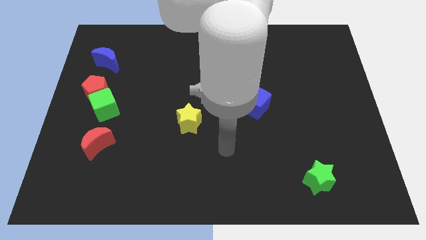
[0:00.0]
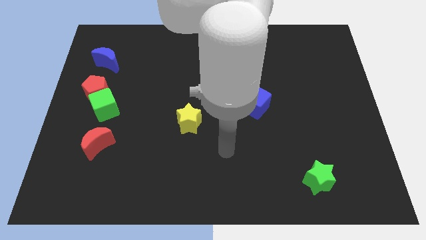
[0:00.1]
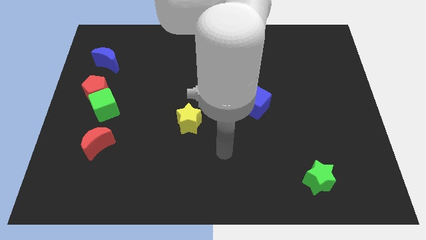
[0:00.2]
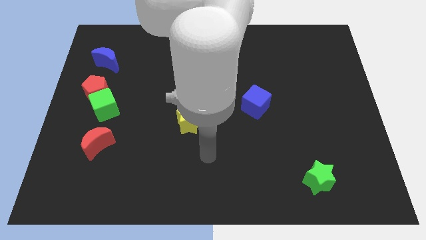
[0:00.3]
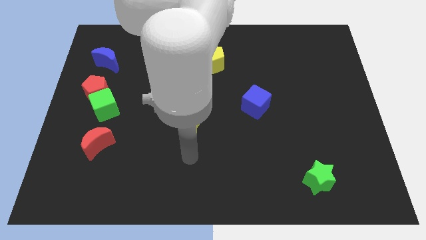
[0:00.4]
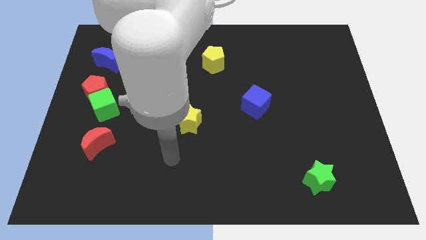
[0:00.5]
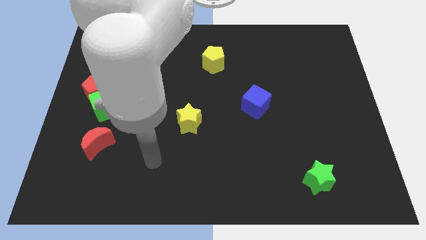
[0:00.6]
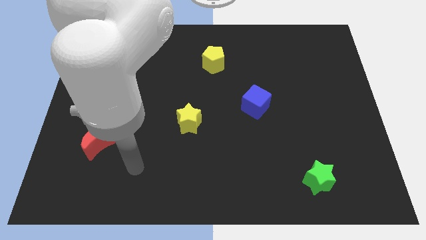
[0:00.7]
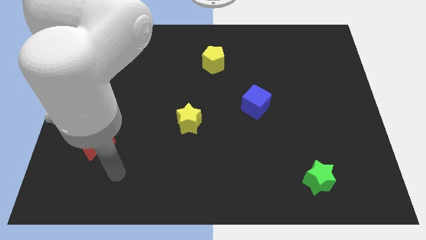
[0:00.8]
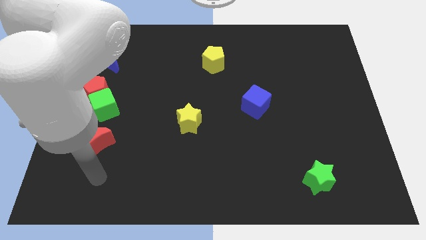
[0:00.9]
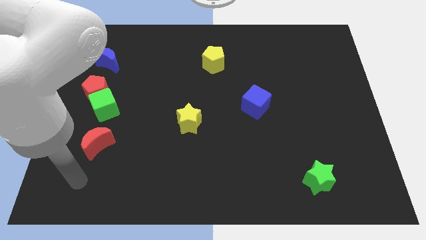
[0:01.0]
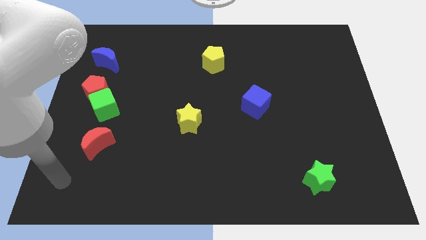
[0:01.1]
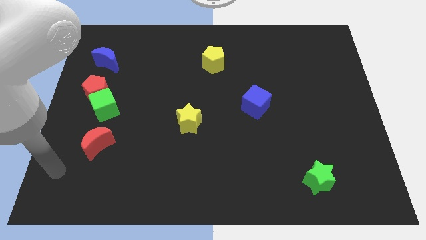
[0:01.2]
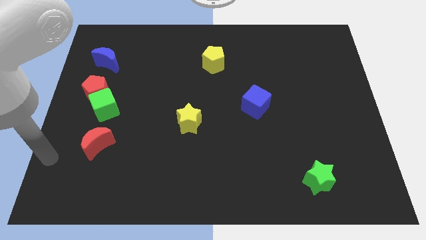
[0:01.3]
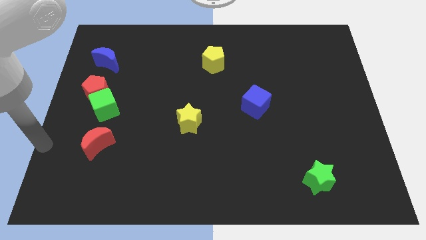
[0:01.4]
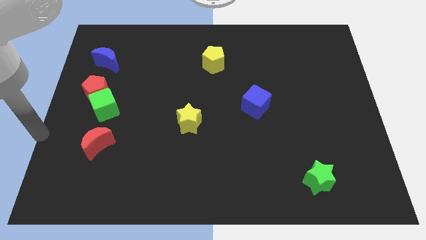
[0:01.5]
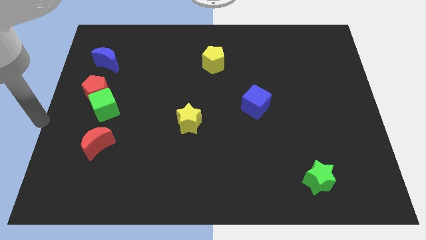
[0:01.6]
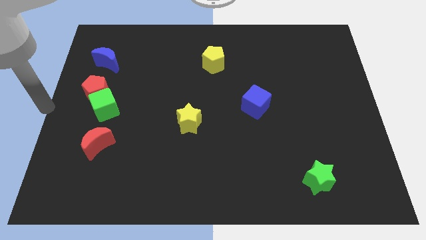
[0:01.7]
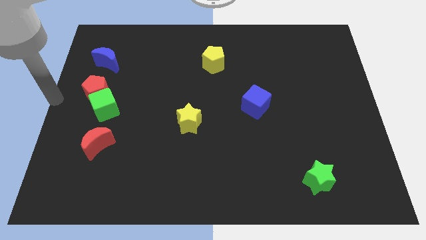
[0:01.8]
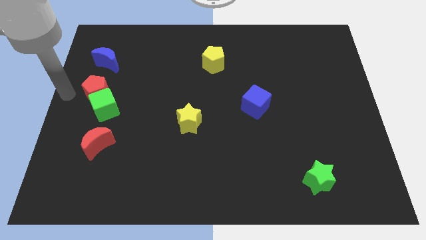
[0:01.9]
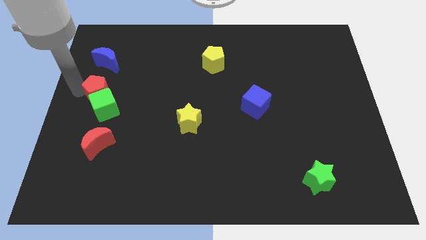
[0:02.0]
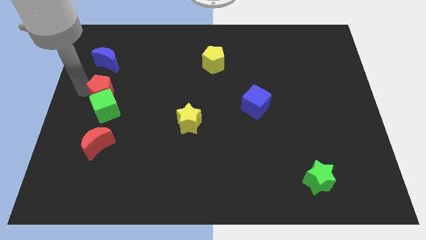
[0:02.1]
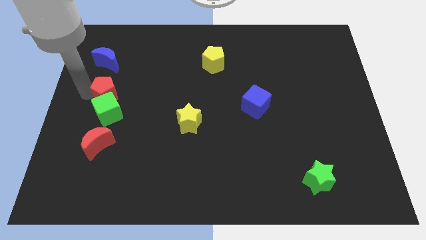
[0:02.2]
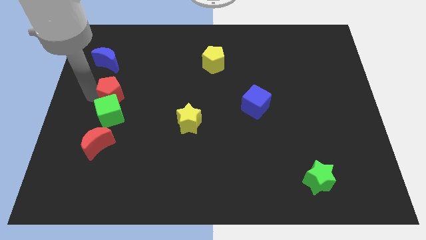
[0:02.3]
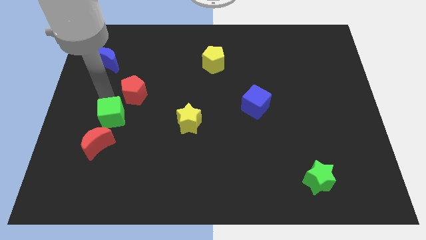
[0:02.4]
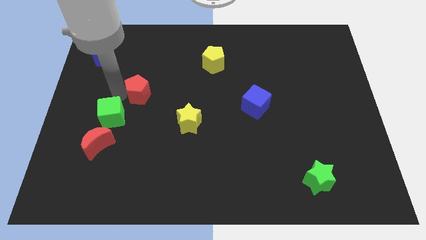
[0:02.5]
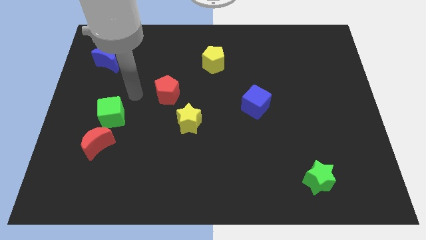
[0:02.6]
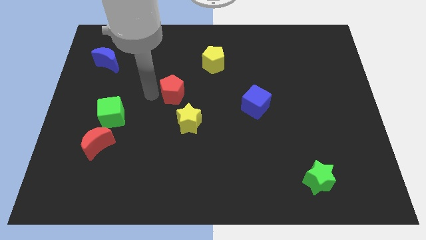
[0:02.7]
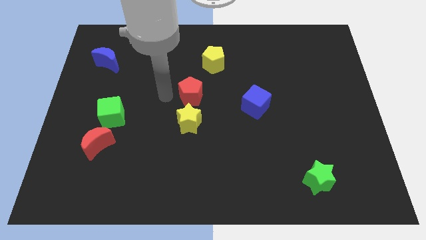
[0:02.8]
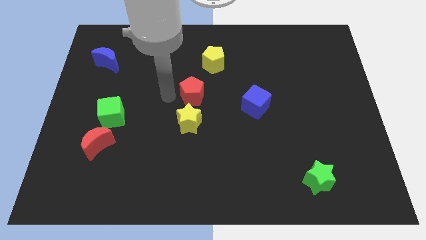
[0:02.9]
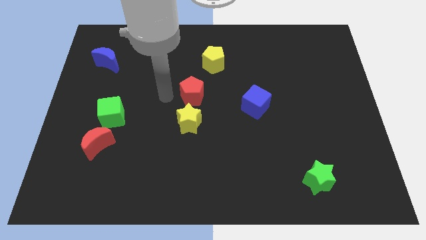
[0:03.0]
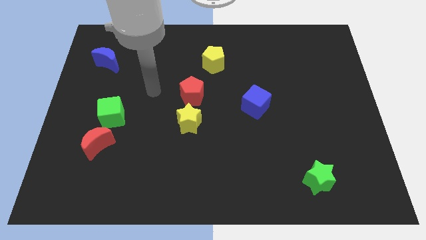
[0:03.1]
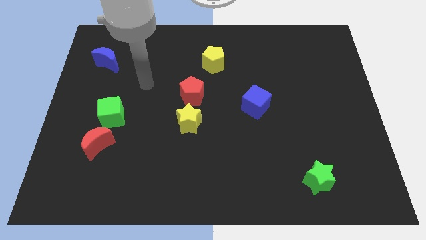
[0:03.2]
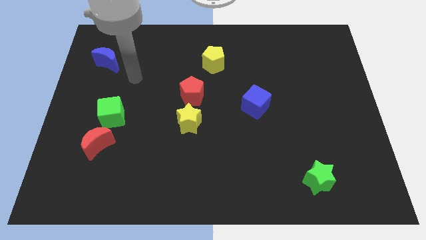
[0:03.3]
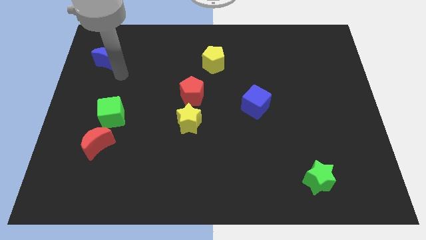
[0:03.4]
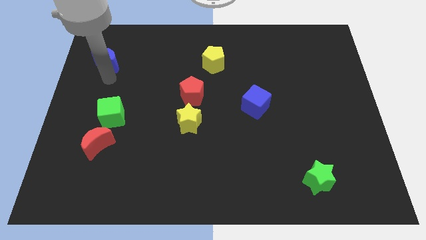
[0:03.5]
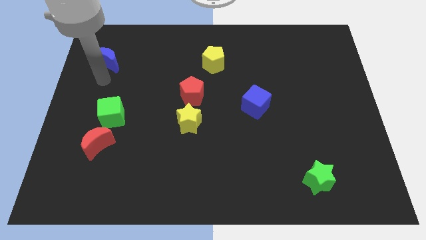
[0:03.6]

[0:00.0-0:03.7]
separate the red pentagon and green cube

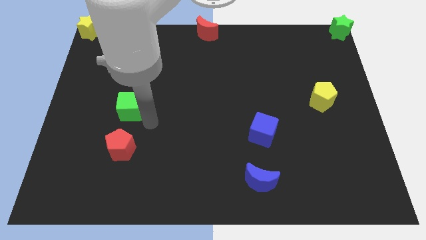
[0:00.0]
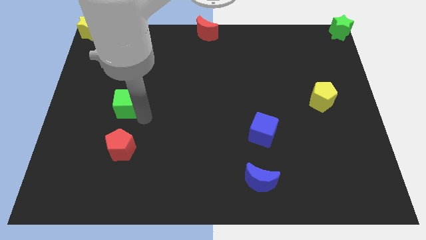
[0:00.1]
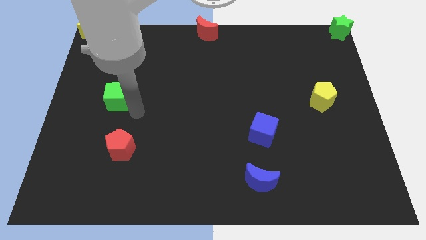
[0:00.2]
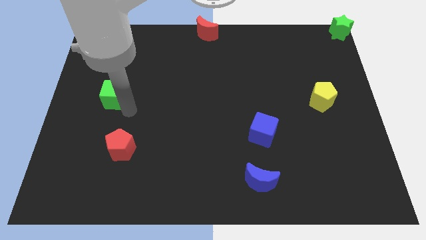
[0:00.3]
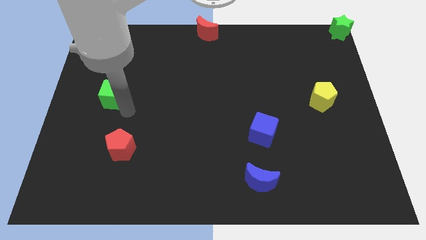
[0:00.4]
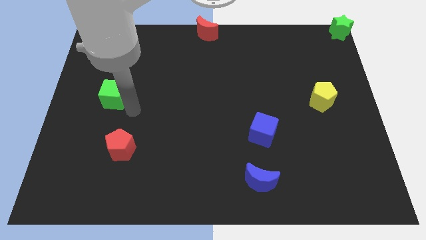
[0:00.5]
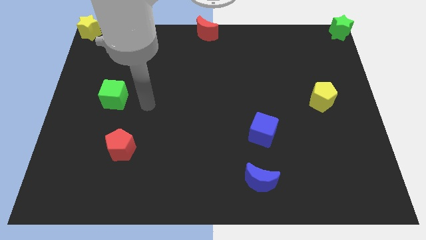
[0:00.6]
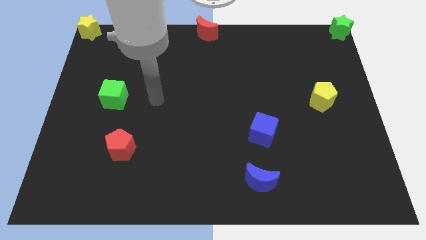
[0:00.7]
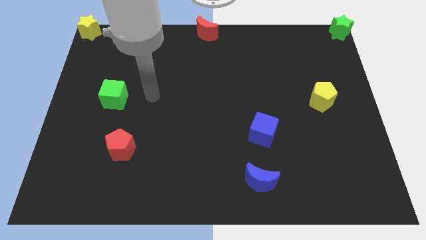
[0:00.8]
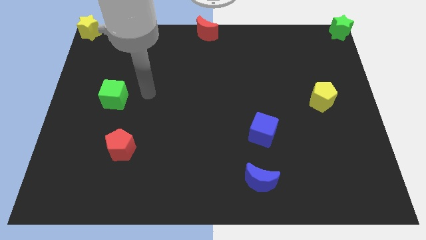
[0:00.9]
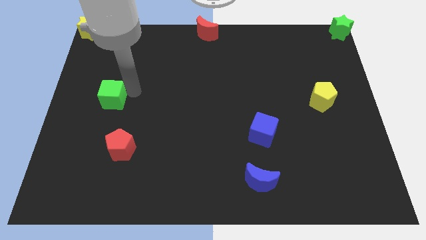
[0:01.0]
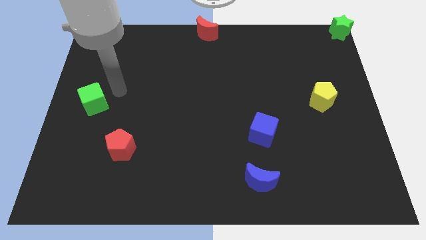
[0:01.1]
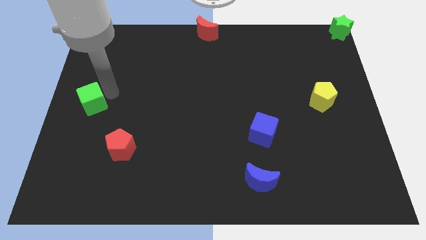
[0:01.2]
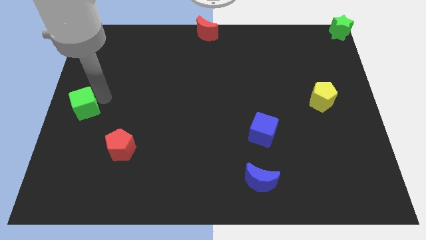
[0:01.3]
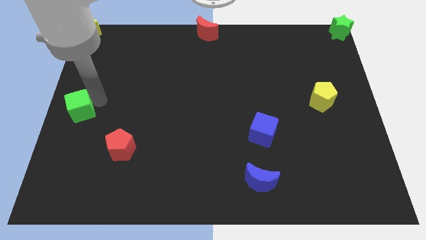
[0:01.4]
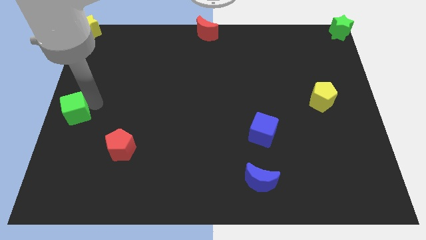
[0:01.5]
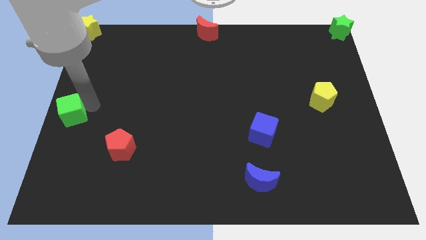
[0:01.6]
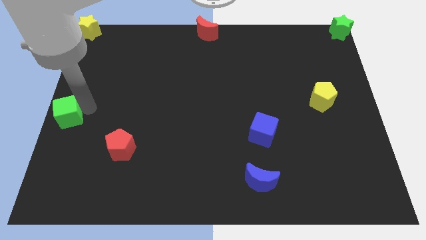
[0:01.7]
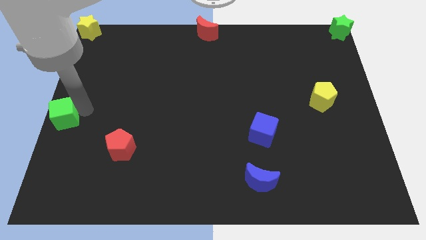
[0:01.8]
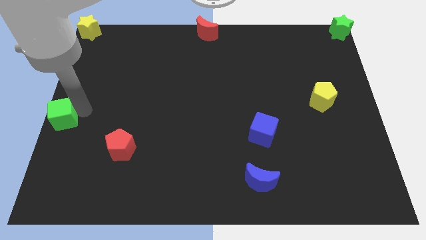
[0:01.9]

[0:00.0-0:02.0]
push the green cube to the center left side

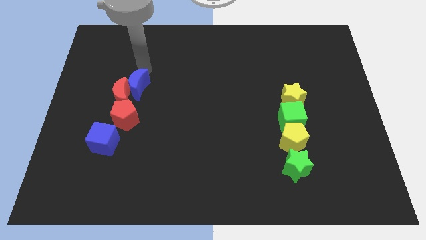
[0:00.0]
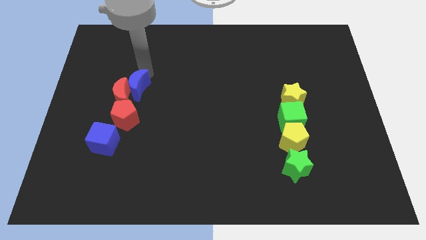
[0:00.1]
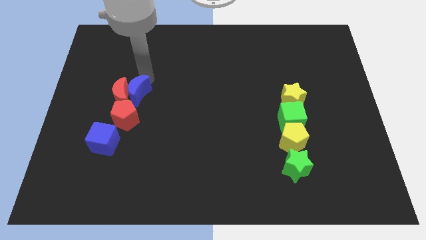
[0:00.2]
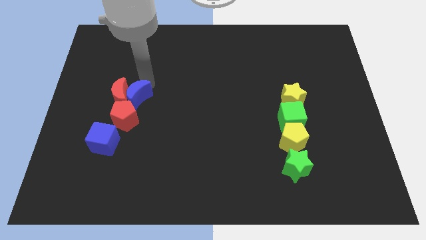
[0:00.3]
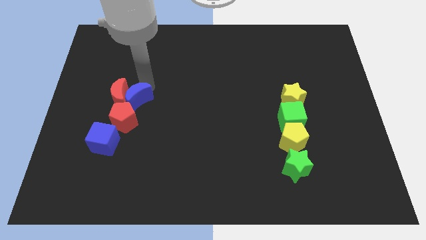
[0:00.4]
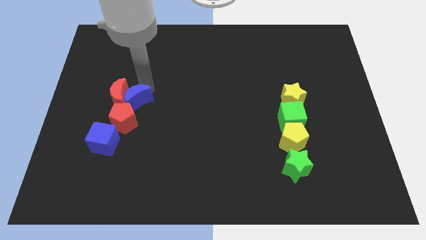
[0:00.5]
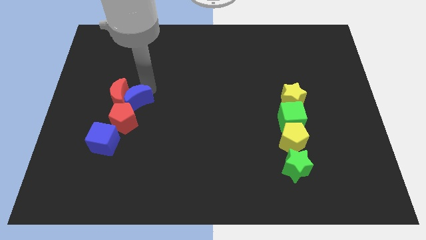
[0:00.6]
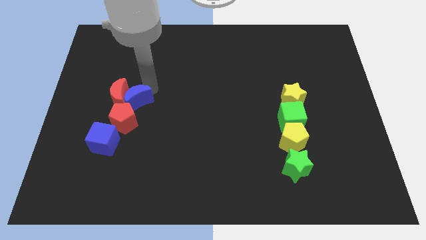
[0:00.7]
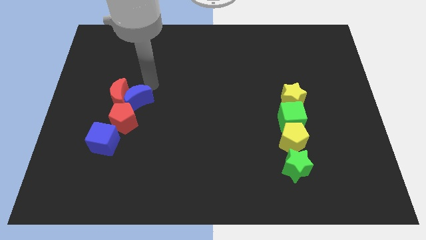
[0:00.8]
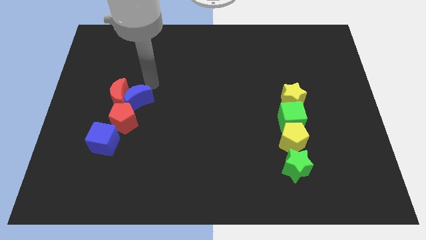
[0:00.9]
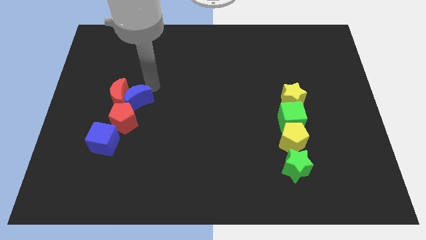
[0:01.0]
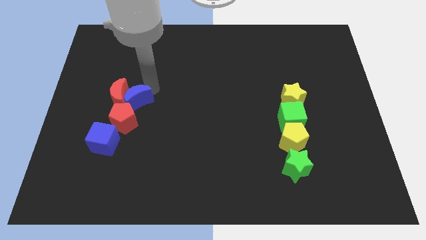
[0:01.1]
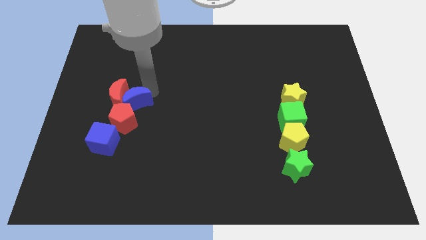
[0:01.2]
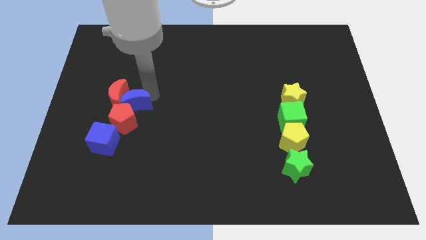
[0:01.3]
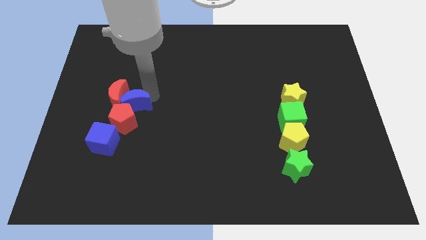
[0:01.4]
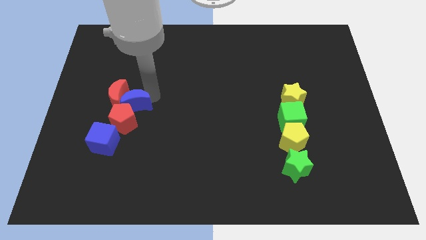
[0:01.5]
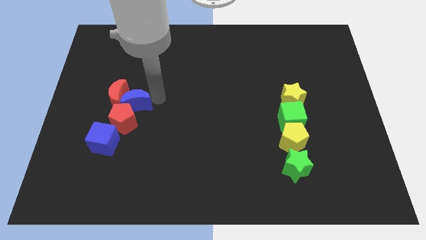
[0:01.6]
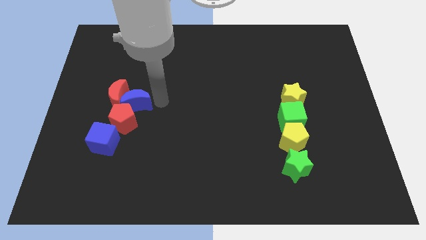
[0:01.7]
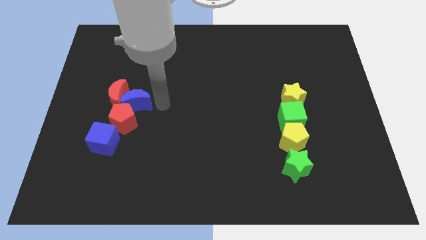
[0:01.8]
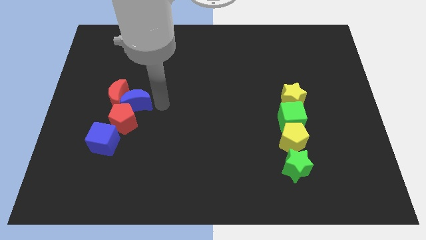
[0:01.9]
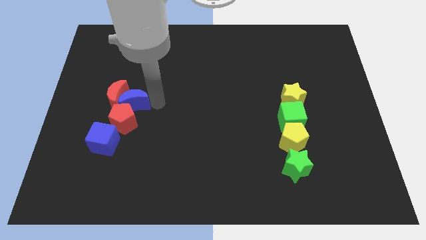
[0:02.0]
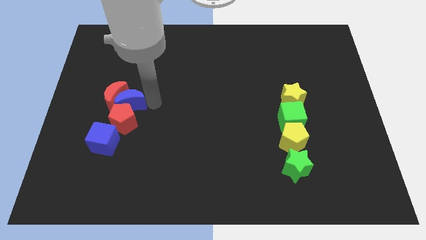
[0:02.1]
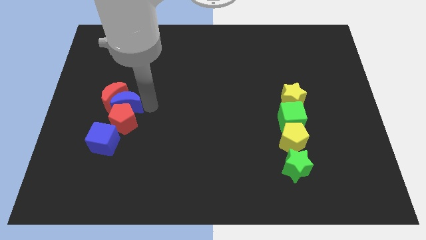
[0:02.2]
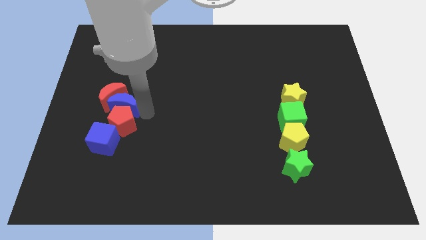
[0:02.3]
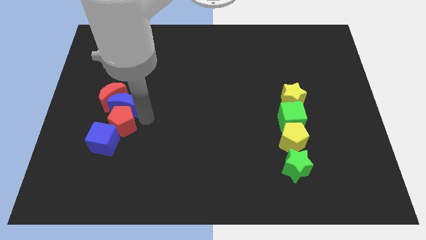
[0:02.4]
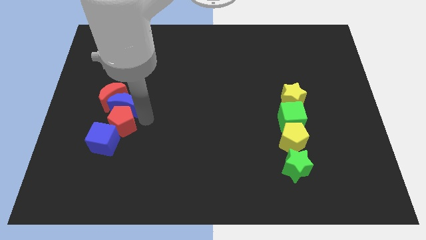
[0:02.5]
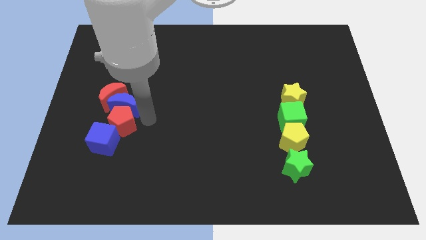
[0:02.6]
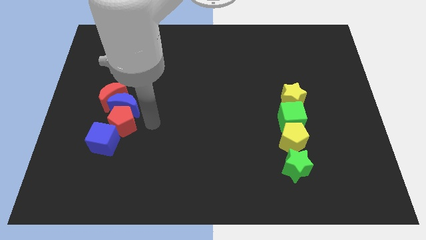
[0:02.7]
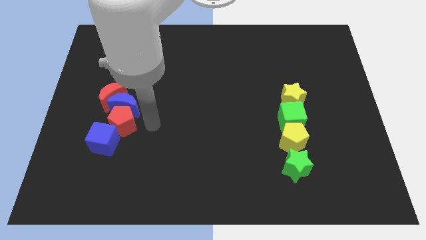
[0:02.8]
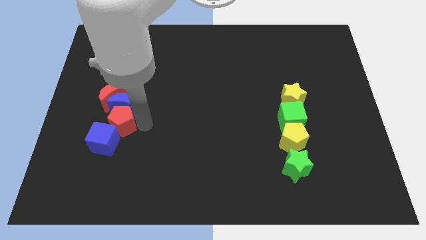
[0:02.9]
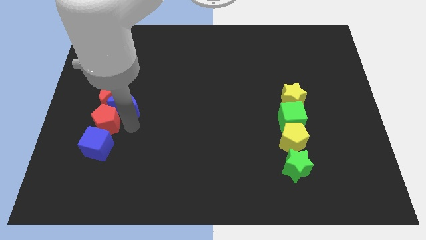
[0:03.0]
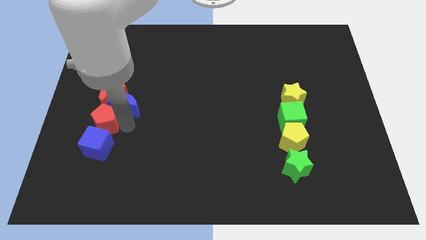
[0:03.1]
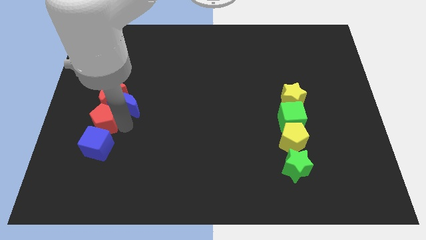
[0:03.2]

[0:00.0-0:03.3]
move the blue crescent into the red pentagon

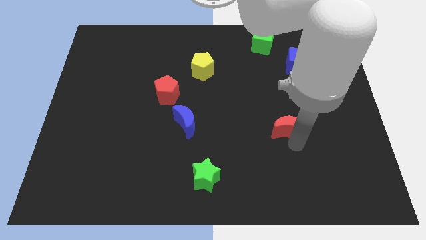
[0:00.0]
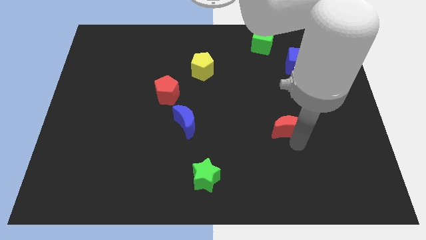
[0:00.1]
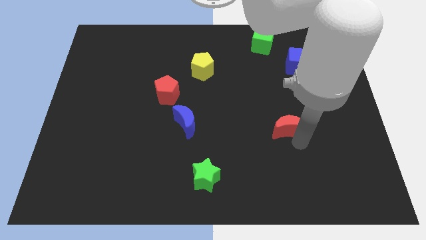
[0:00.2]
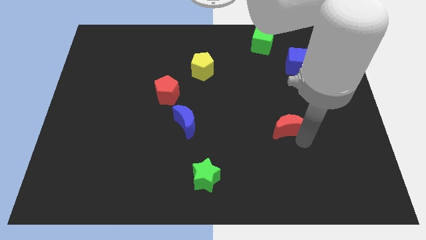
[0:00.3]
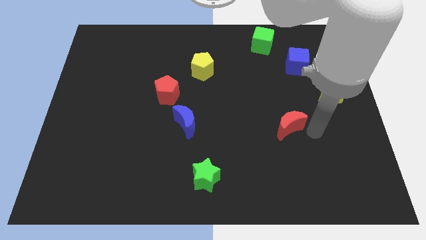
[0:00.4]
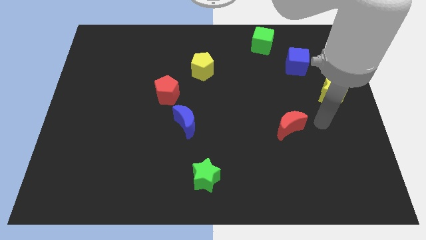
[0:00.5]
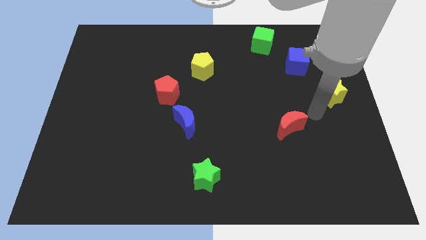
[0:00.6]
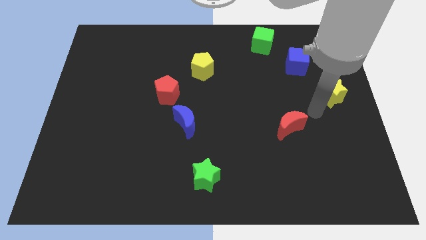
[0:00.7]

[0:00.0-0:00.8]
move the red moon slightly towards the yellow star
